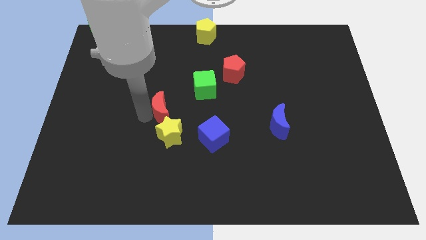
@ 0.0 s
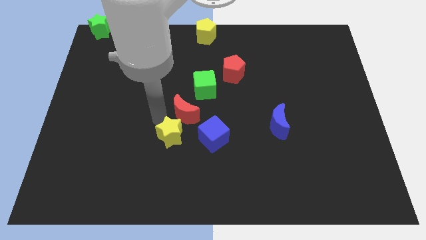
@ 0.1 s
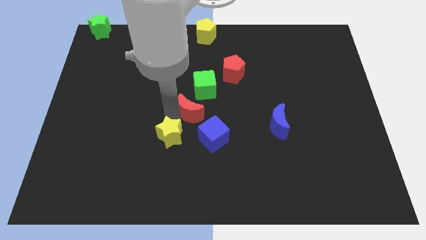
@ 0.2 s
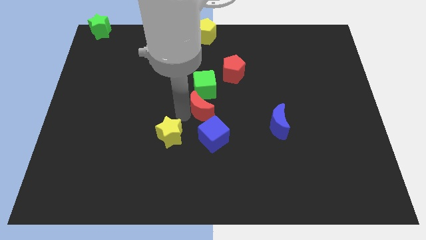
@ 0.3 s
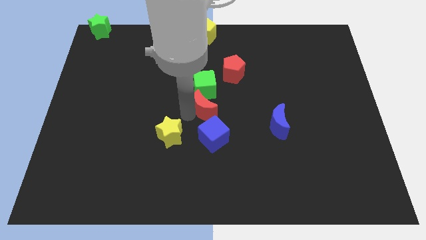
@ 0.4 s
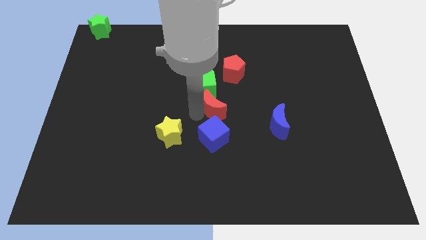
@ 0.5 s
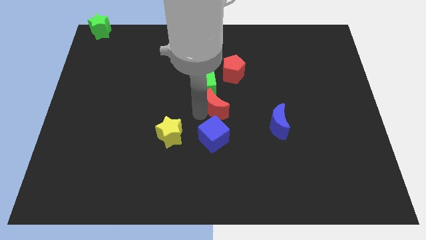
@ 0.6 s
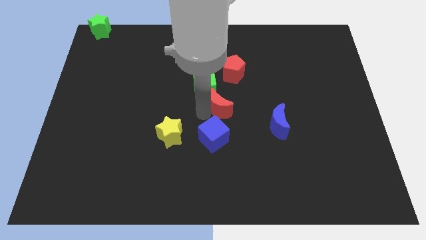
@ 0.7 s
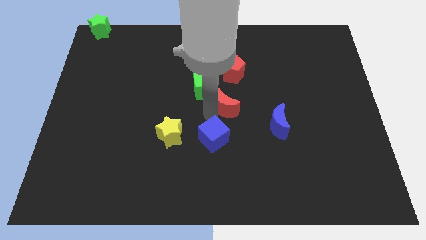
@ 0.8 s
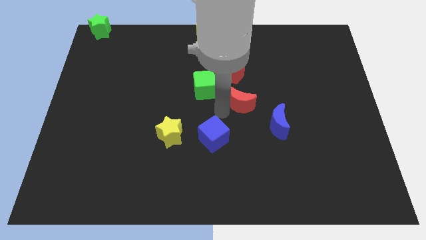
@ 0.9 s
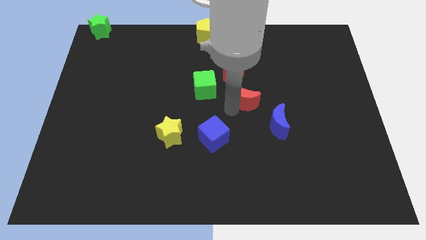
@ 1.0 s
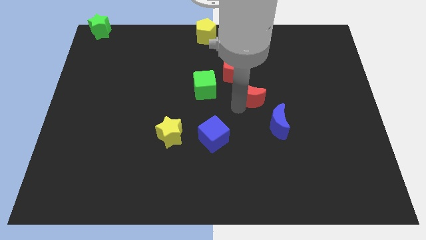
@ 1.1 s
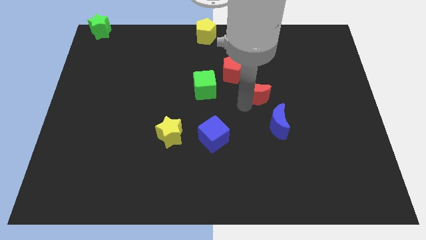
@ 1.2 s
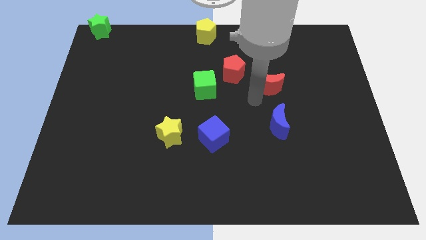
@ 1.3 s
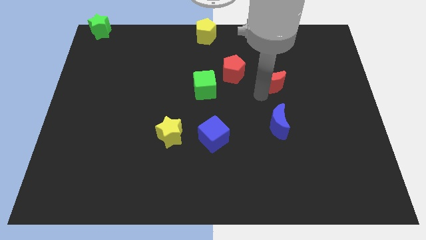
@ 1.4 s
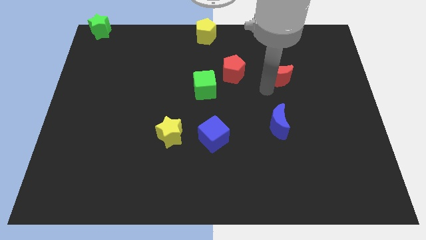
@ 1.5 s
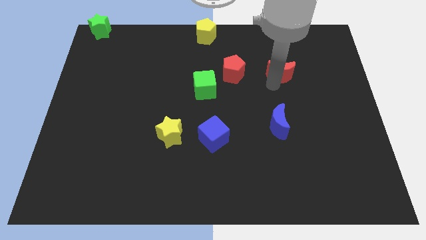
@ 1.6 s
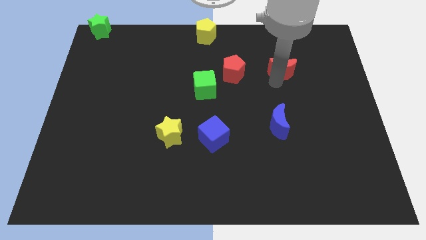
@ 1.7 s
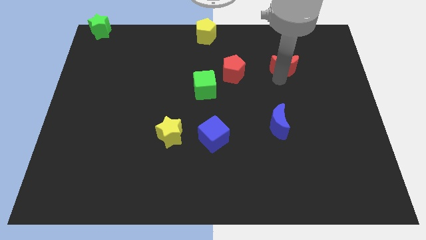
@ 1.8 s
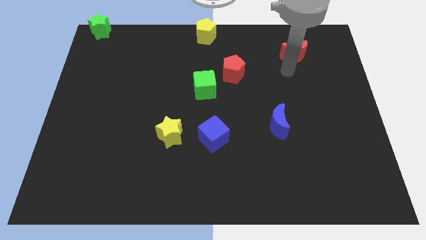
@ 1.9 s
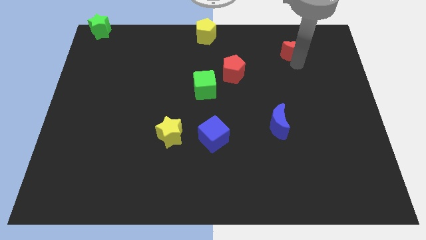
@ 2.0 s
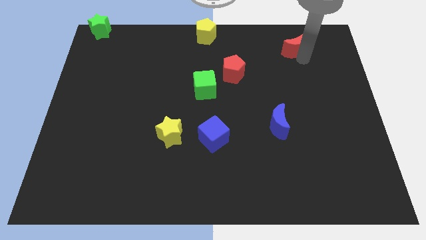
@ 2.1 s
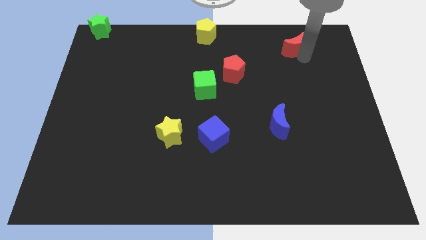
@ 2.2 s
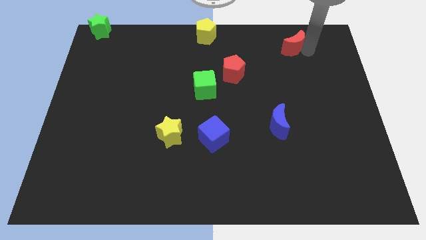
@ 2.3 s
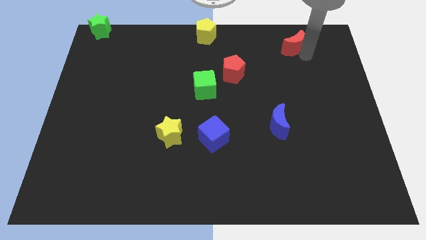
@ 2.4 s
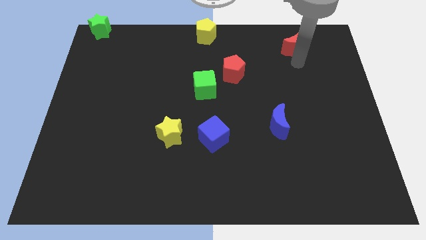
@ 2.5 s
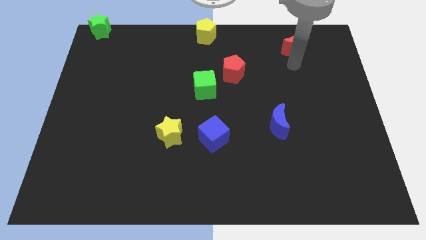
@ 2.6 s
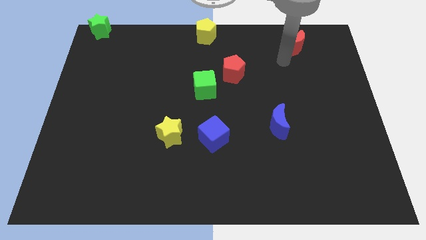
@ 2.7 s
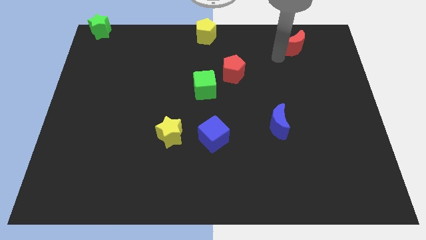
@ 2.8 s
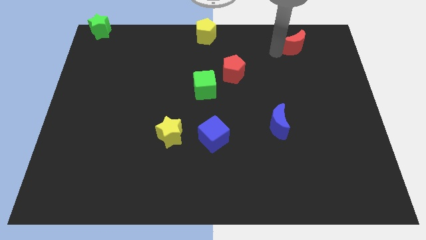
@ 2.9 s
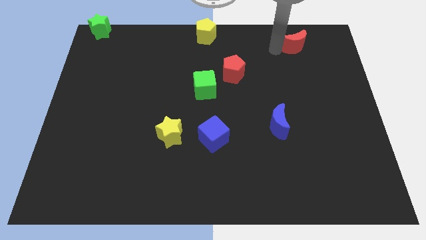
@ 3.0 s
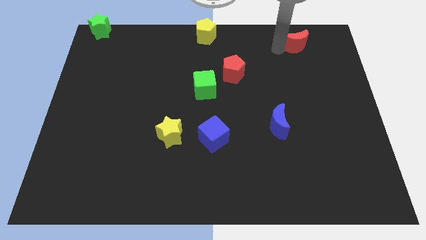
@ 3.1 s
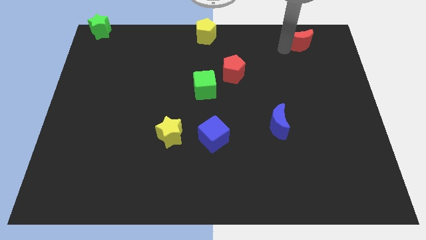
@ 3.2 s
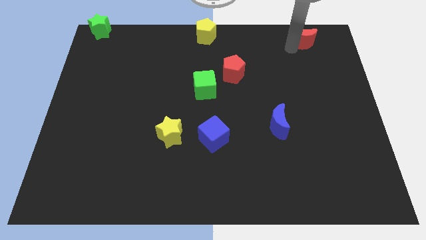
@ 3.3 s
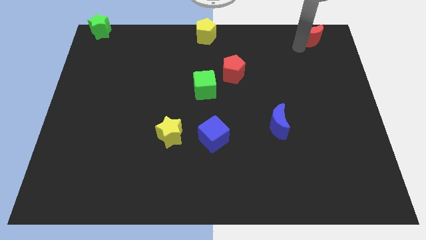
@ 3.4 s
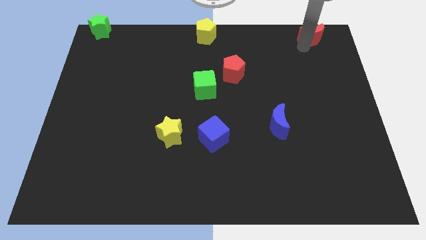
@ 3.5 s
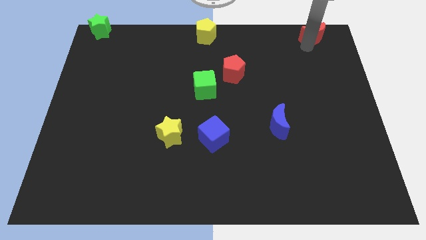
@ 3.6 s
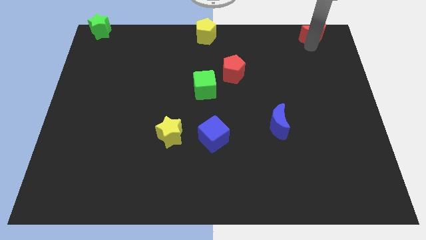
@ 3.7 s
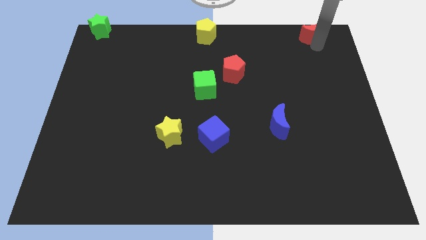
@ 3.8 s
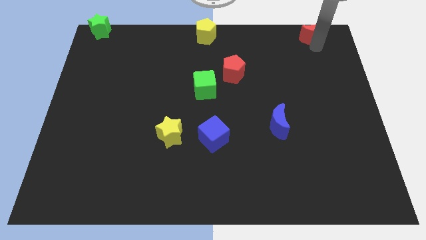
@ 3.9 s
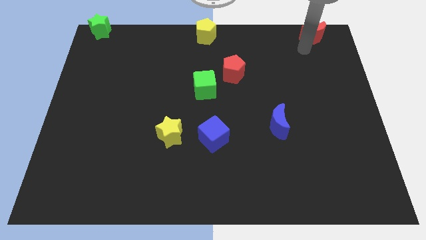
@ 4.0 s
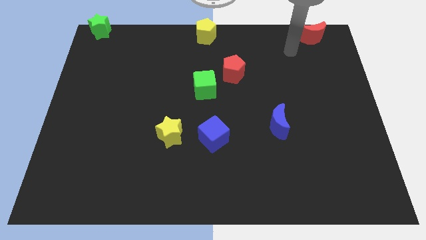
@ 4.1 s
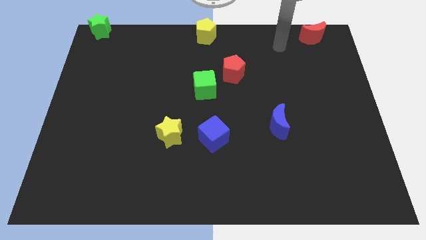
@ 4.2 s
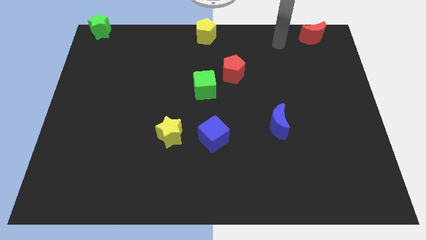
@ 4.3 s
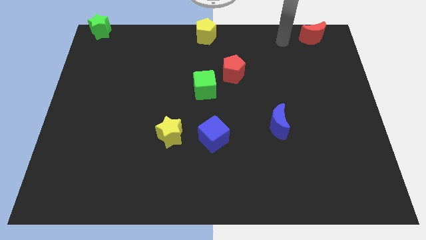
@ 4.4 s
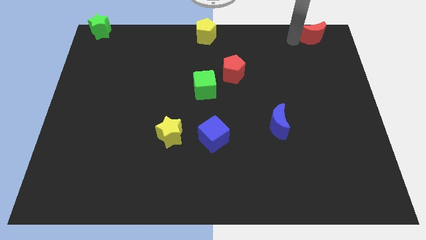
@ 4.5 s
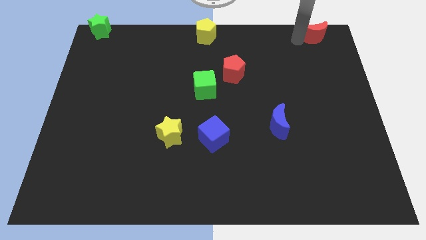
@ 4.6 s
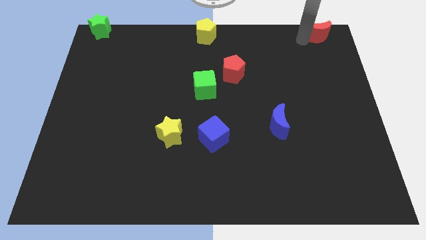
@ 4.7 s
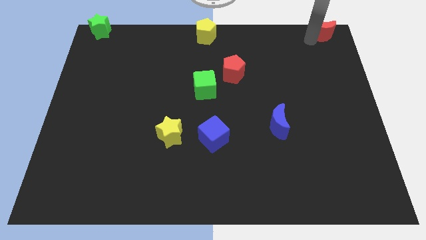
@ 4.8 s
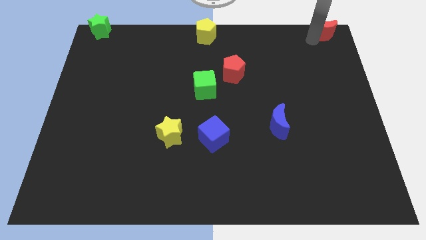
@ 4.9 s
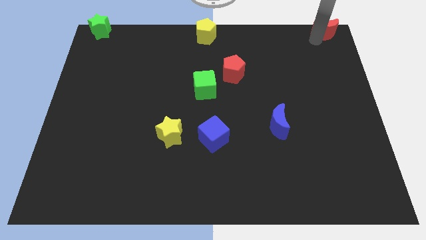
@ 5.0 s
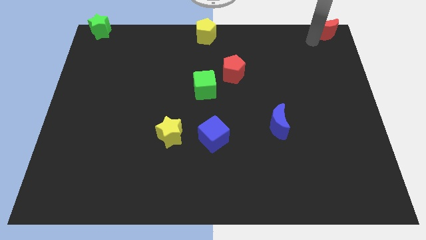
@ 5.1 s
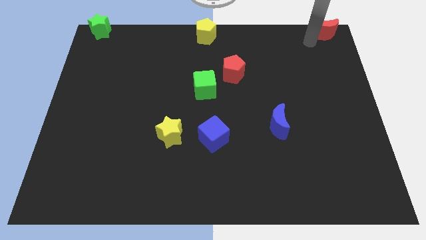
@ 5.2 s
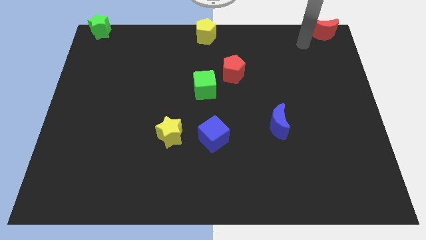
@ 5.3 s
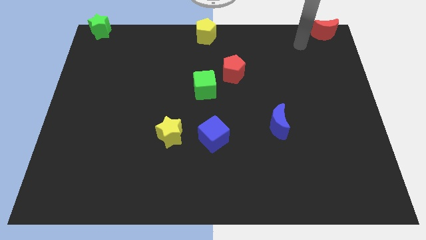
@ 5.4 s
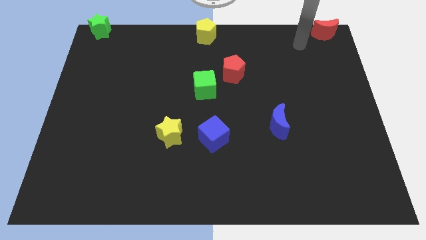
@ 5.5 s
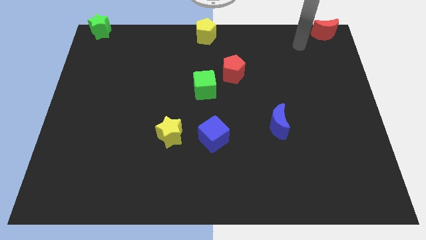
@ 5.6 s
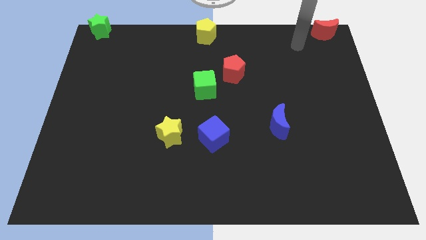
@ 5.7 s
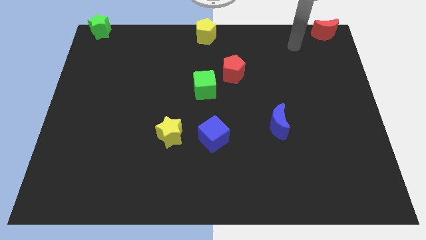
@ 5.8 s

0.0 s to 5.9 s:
place the crescent to the right top corner of the board

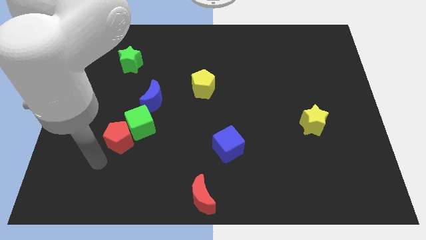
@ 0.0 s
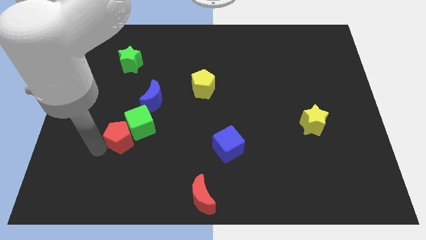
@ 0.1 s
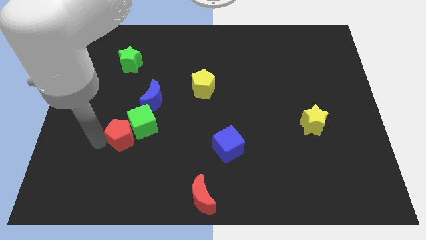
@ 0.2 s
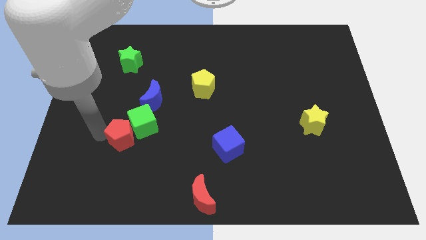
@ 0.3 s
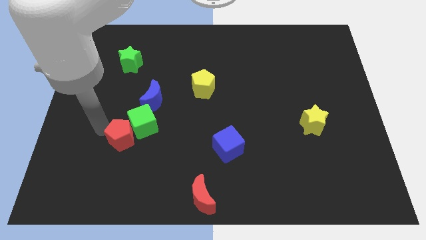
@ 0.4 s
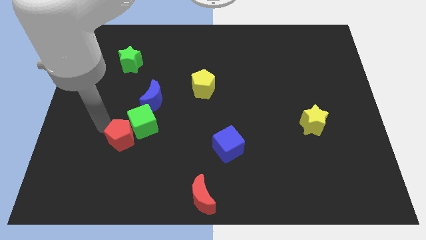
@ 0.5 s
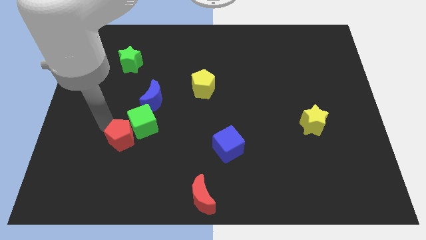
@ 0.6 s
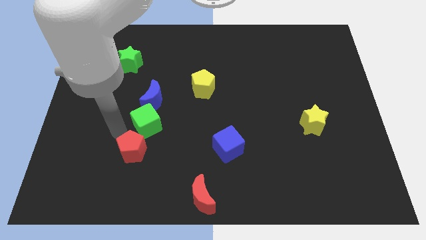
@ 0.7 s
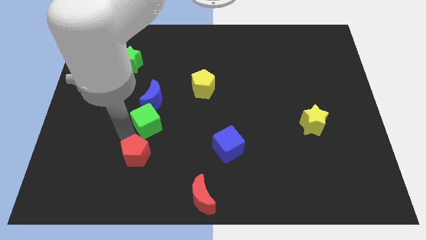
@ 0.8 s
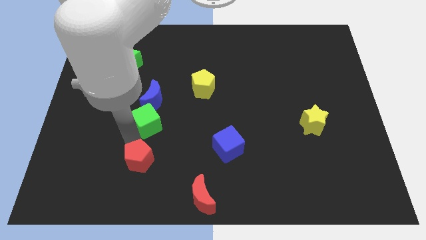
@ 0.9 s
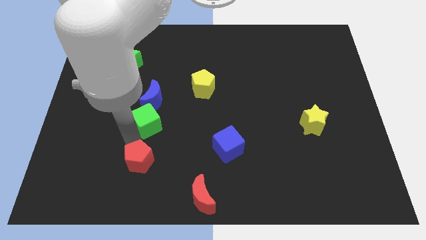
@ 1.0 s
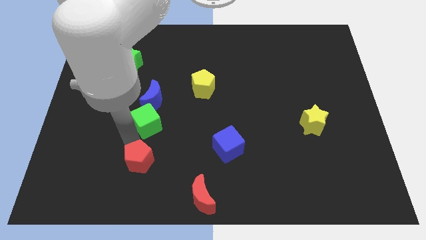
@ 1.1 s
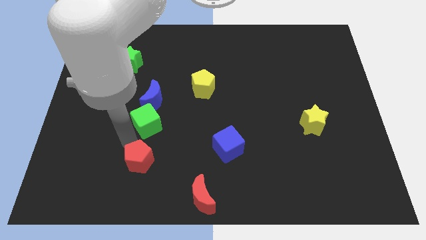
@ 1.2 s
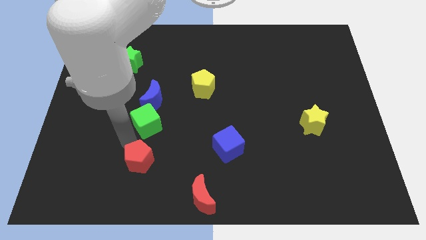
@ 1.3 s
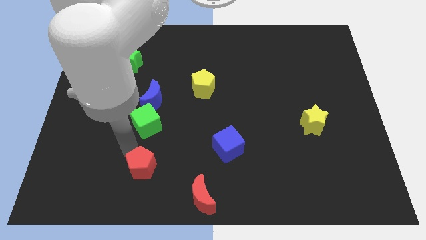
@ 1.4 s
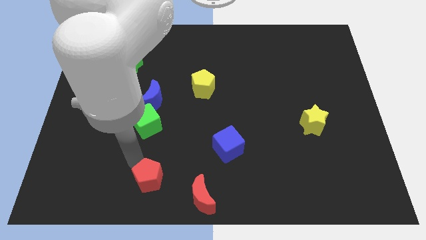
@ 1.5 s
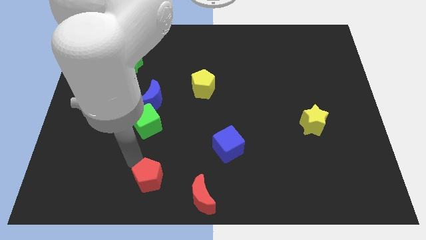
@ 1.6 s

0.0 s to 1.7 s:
push the red pentagon towards the red crescent

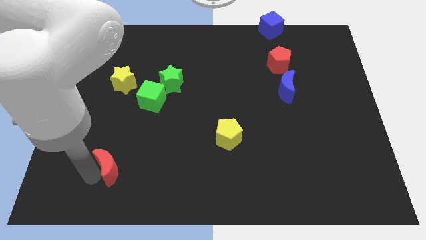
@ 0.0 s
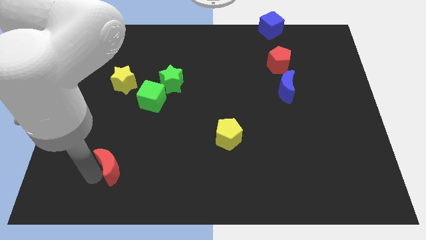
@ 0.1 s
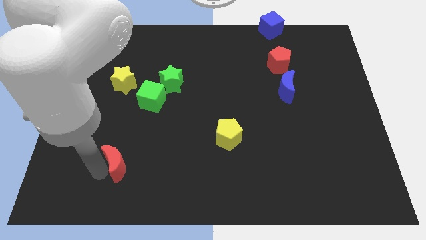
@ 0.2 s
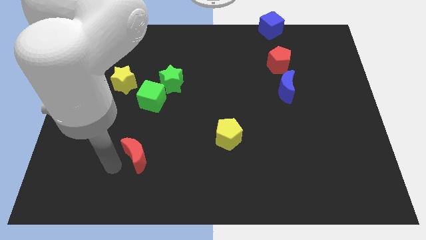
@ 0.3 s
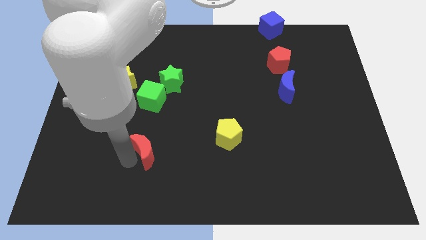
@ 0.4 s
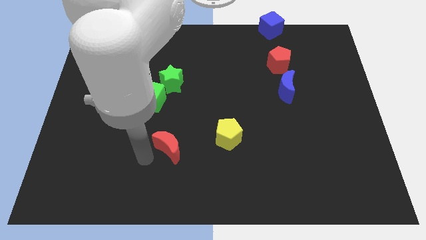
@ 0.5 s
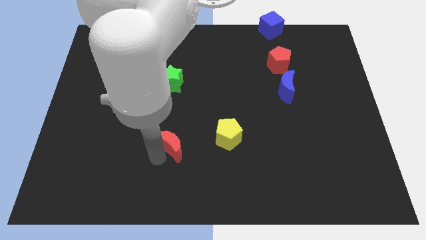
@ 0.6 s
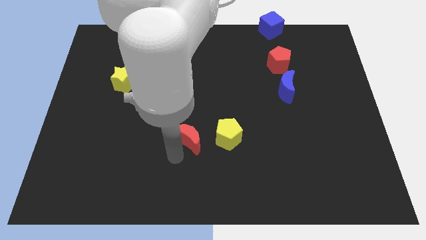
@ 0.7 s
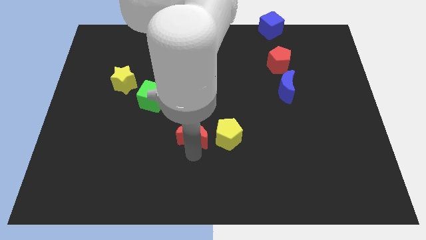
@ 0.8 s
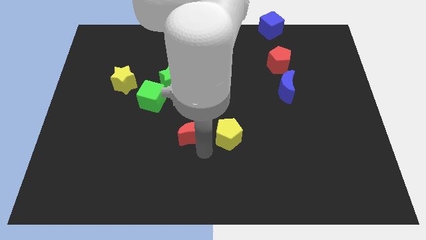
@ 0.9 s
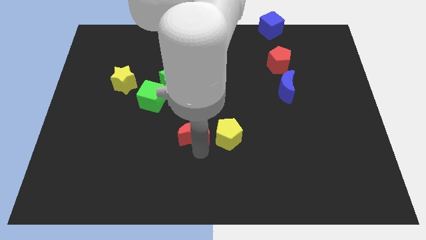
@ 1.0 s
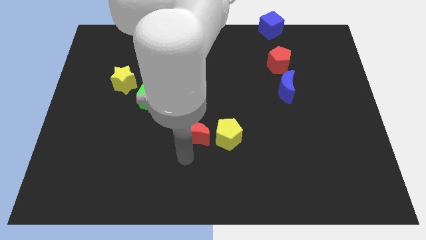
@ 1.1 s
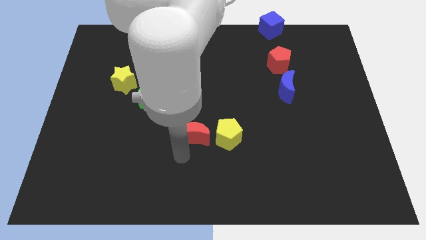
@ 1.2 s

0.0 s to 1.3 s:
move the red crescent close to the left side of the yellow pentagon
